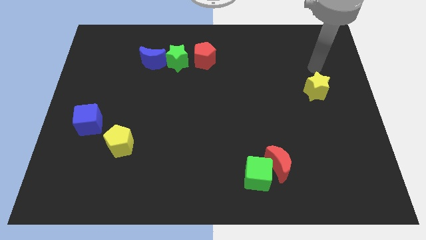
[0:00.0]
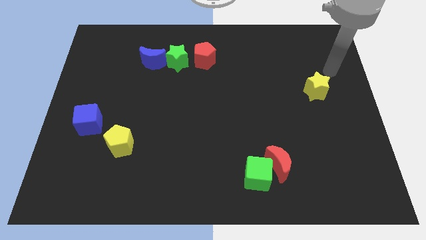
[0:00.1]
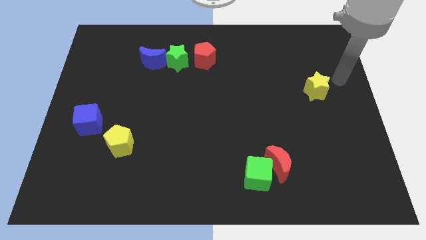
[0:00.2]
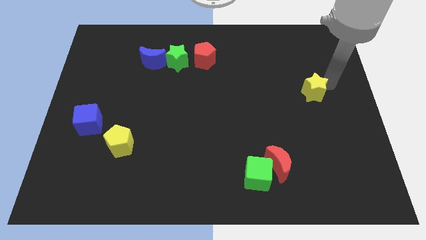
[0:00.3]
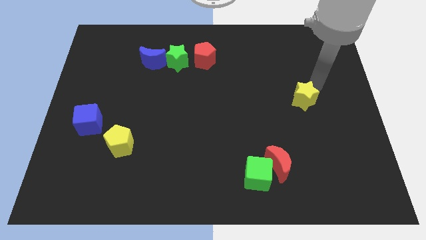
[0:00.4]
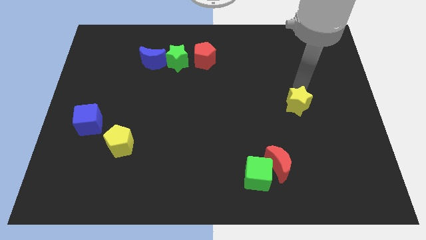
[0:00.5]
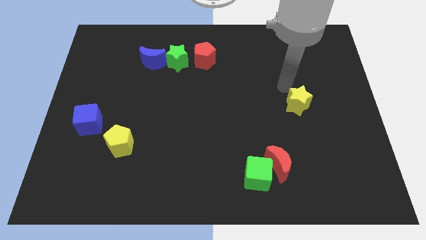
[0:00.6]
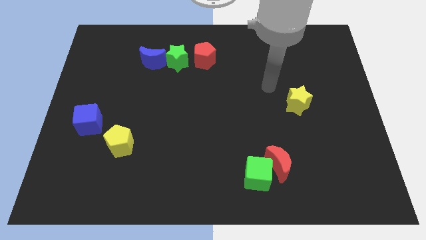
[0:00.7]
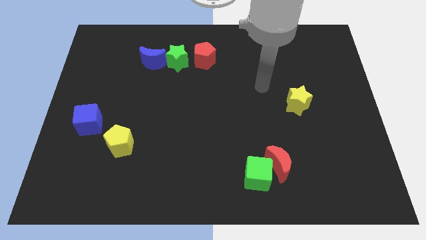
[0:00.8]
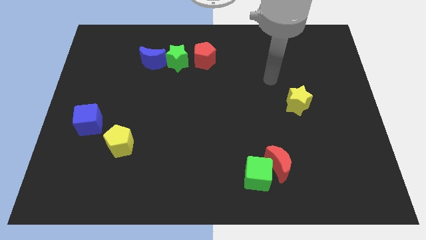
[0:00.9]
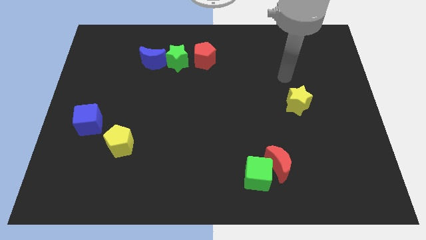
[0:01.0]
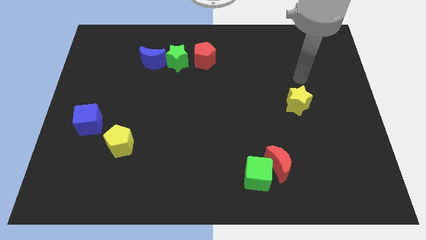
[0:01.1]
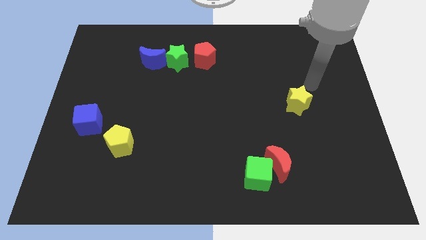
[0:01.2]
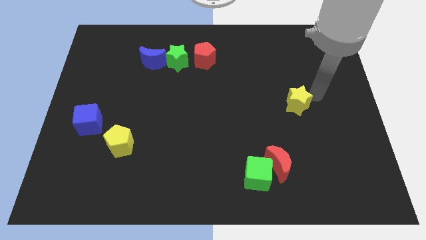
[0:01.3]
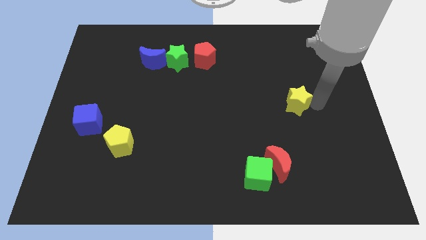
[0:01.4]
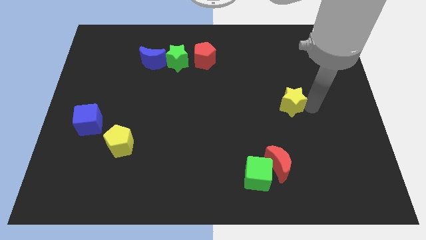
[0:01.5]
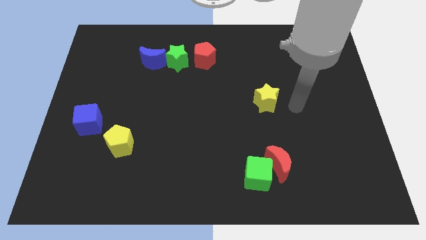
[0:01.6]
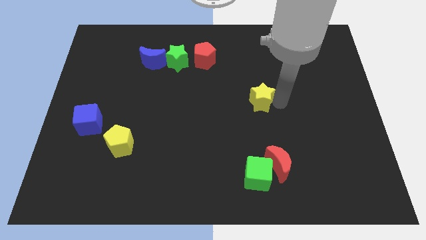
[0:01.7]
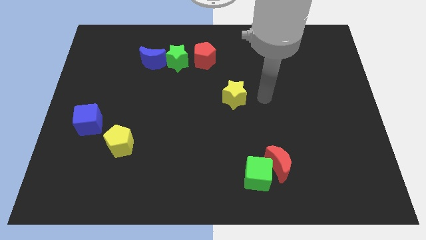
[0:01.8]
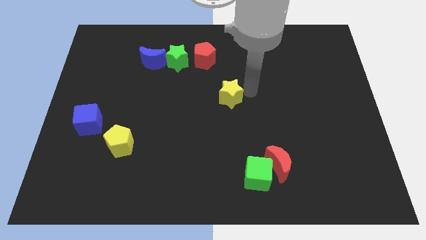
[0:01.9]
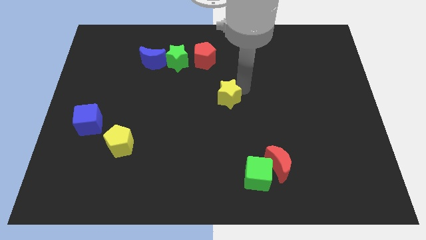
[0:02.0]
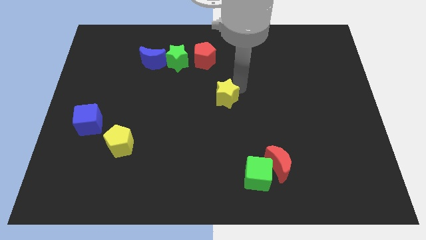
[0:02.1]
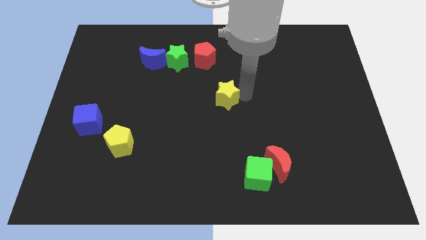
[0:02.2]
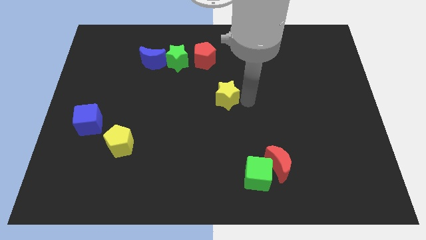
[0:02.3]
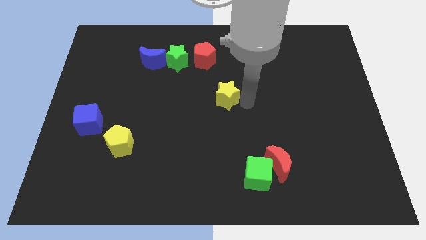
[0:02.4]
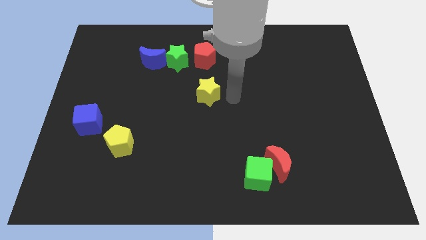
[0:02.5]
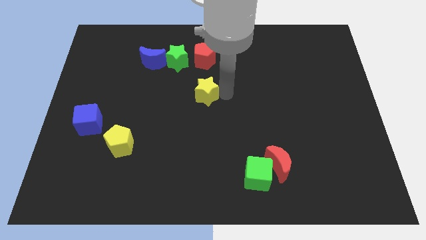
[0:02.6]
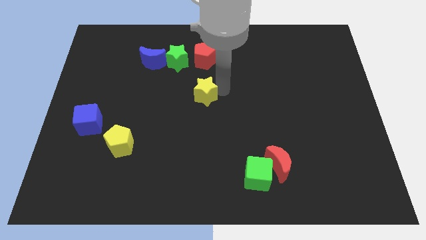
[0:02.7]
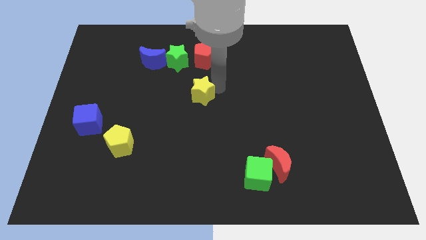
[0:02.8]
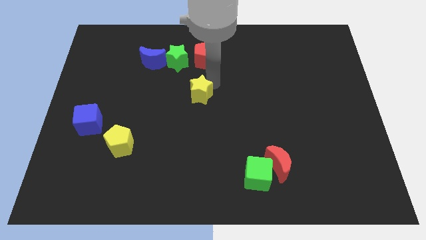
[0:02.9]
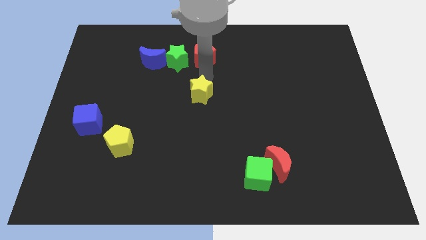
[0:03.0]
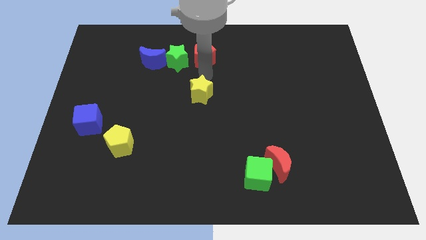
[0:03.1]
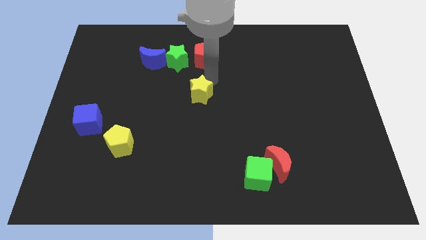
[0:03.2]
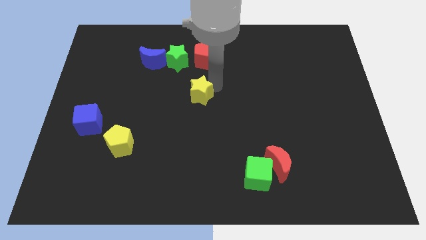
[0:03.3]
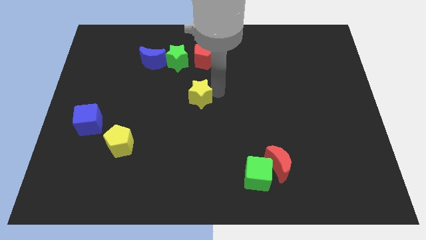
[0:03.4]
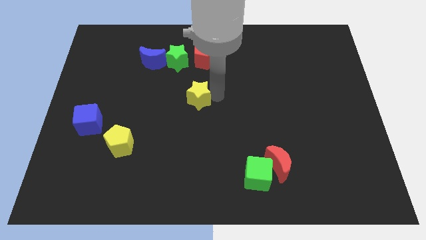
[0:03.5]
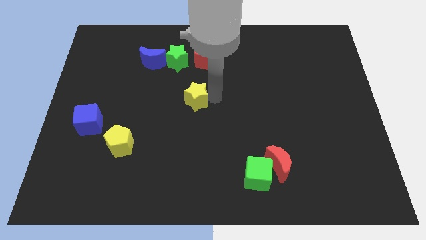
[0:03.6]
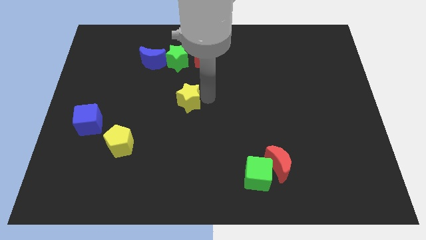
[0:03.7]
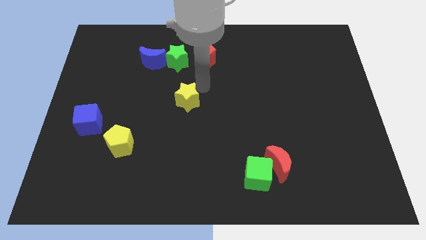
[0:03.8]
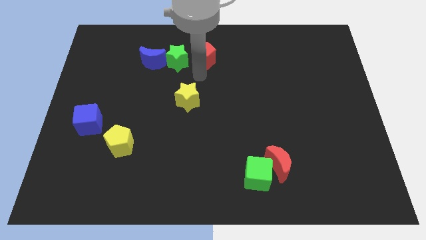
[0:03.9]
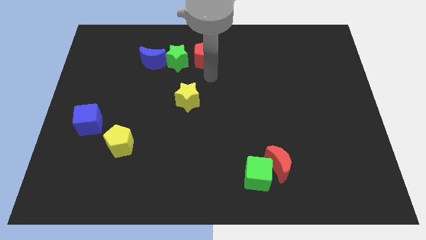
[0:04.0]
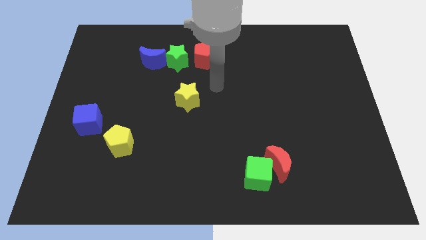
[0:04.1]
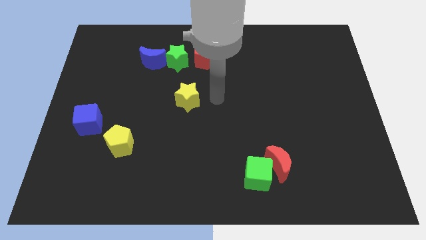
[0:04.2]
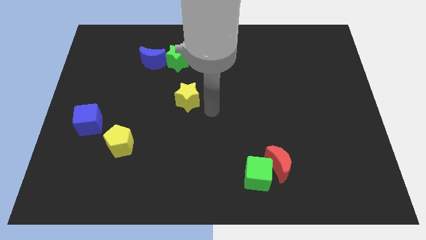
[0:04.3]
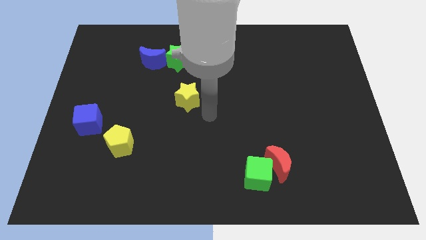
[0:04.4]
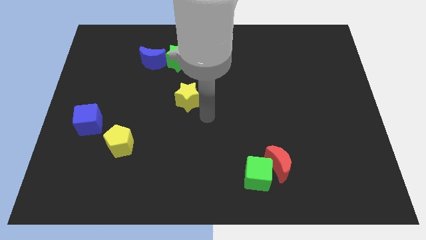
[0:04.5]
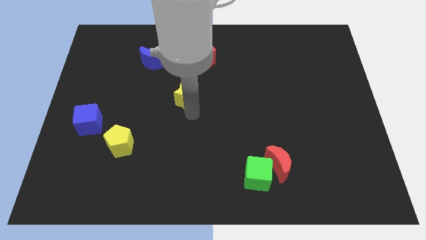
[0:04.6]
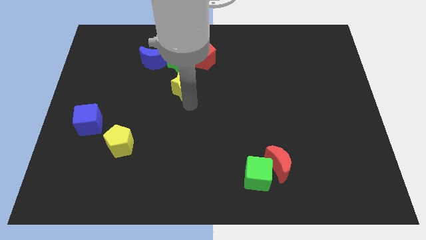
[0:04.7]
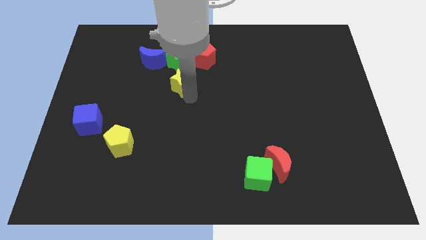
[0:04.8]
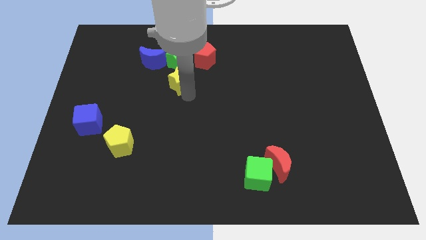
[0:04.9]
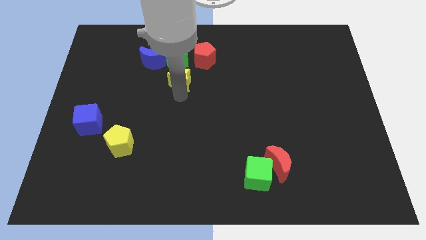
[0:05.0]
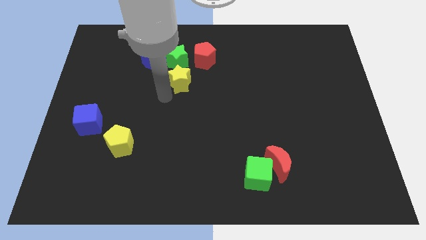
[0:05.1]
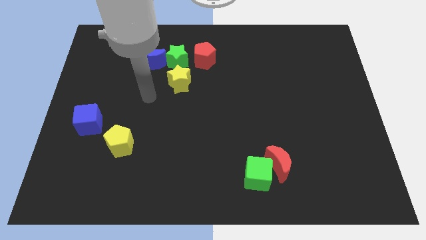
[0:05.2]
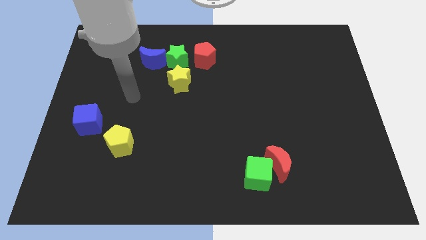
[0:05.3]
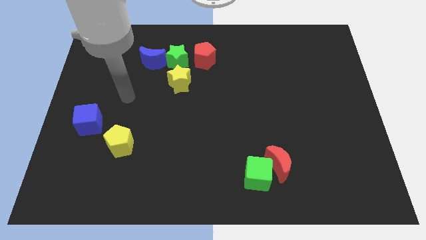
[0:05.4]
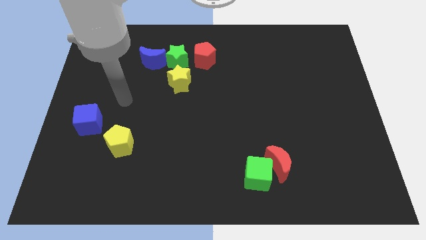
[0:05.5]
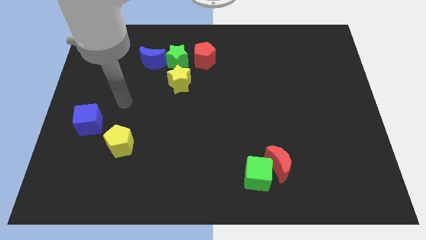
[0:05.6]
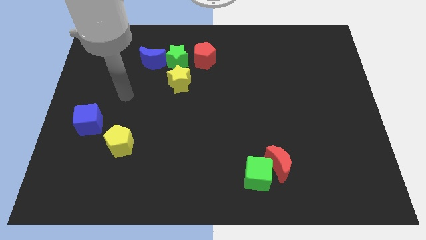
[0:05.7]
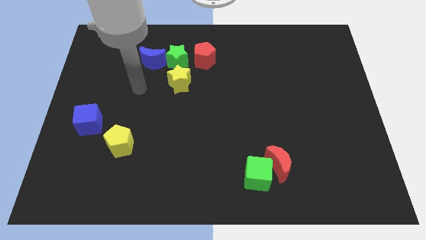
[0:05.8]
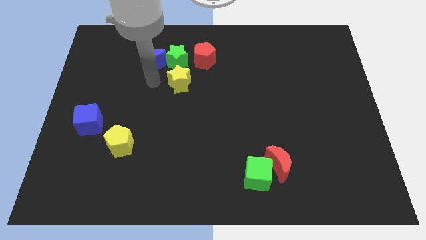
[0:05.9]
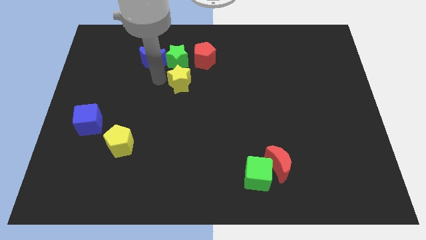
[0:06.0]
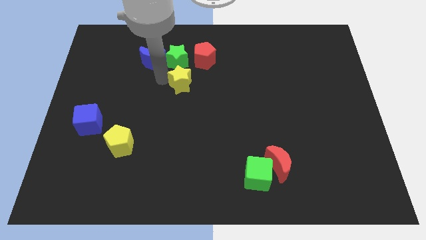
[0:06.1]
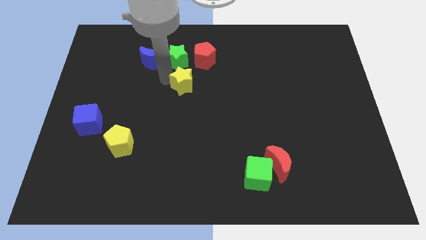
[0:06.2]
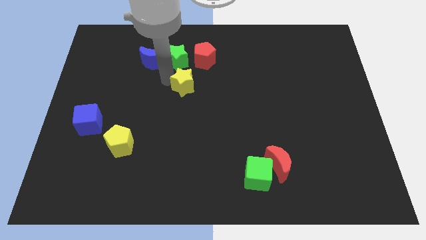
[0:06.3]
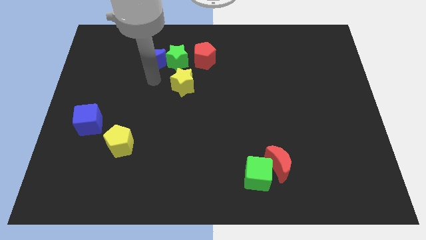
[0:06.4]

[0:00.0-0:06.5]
move the yellow star to the bottom of the green star

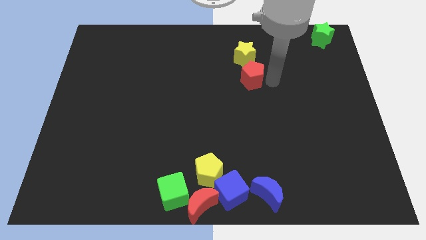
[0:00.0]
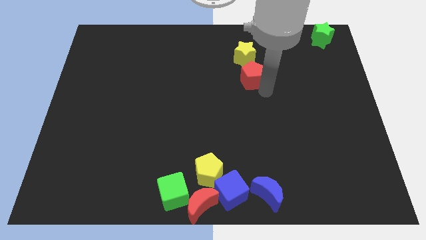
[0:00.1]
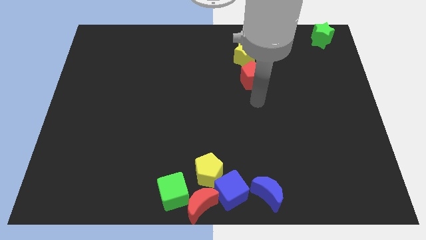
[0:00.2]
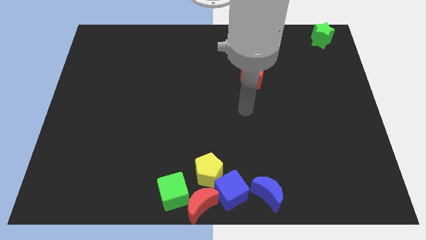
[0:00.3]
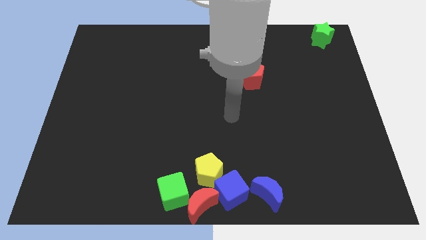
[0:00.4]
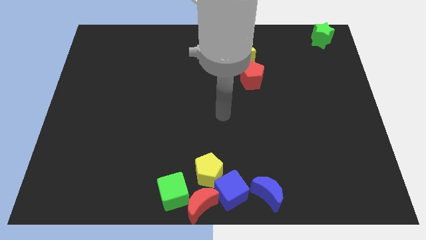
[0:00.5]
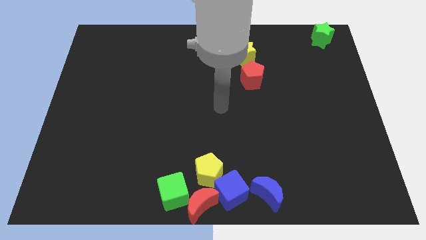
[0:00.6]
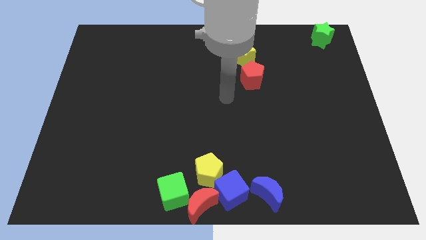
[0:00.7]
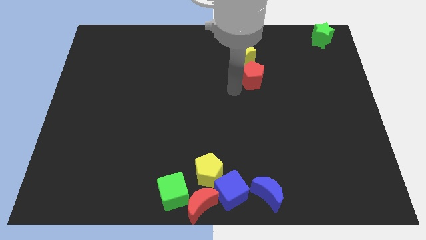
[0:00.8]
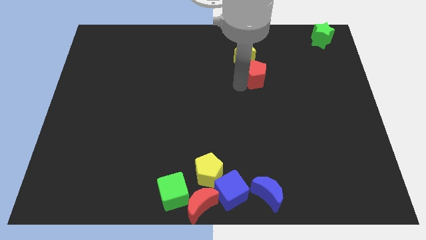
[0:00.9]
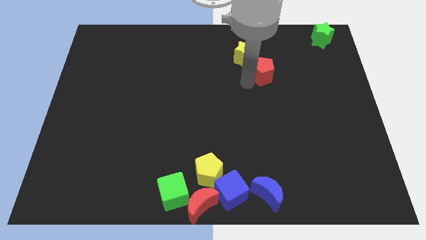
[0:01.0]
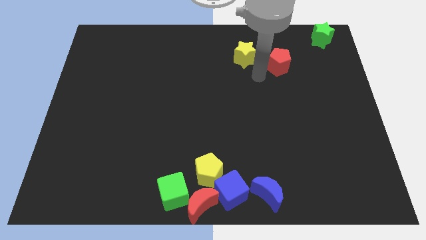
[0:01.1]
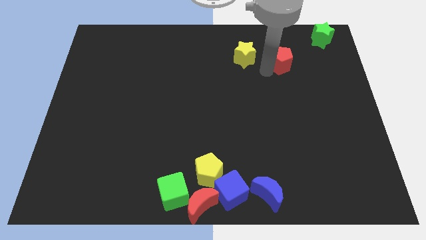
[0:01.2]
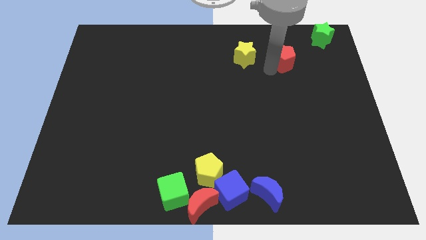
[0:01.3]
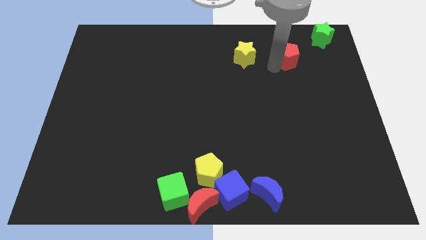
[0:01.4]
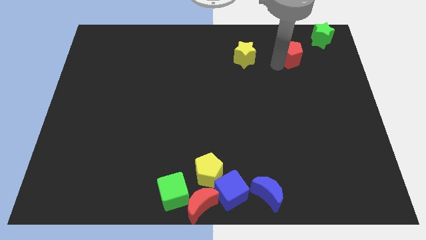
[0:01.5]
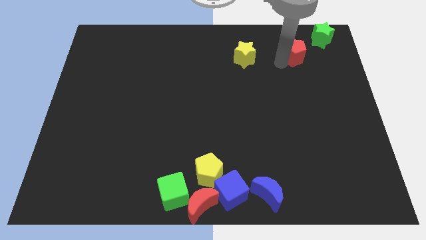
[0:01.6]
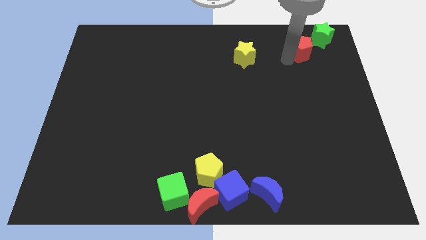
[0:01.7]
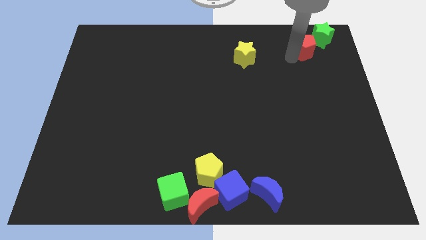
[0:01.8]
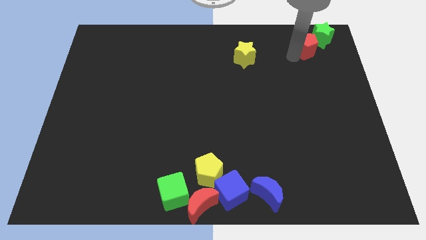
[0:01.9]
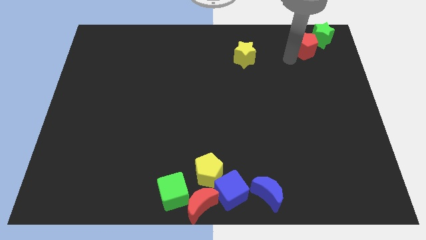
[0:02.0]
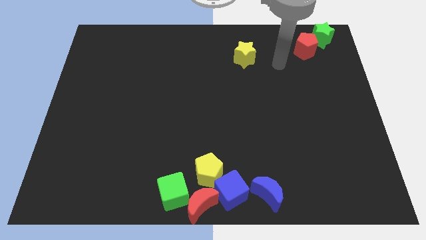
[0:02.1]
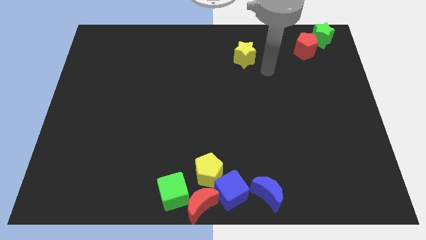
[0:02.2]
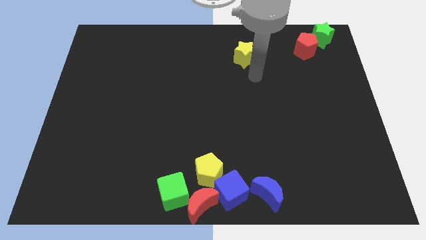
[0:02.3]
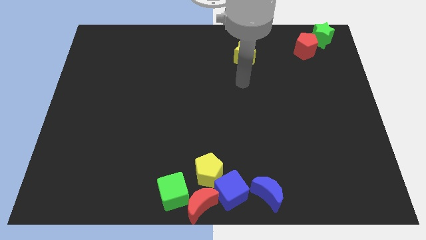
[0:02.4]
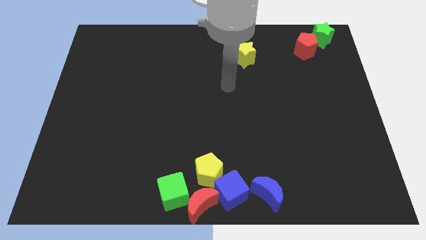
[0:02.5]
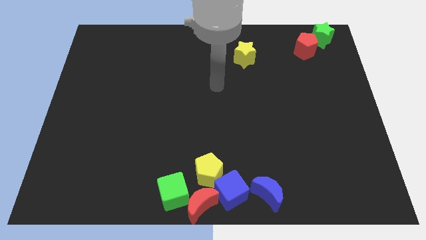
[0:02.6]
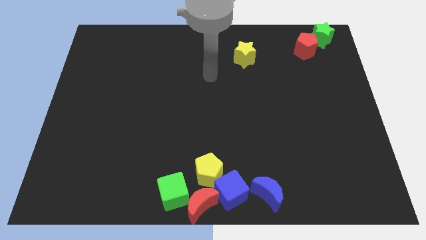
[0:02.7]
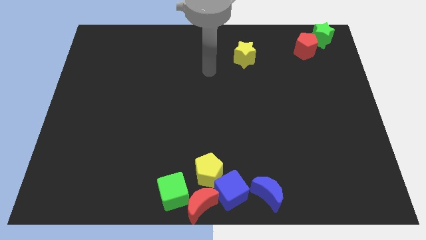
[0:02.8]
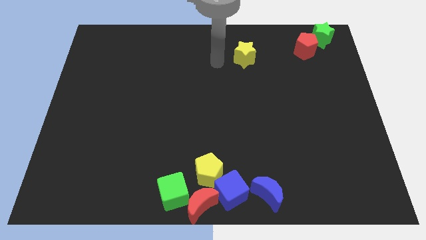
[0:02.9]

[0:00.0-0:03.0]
move the red pentagon left to the green star
